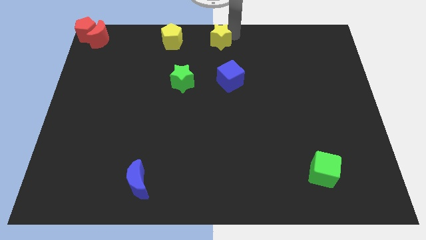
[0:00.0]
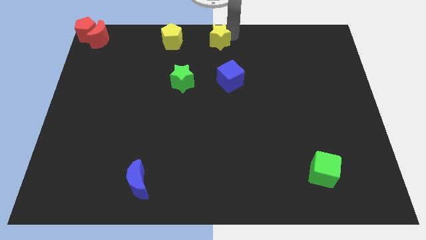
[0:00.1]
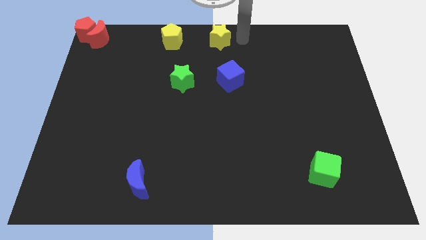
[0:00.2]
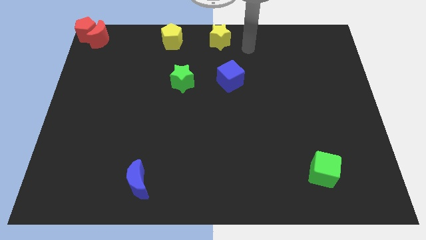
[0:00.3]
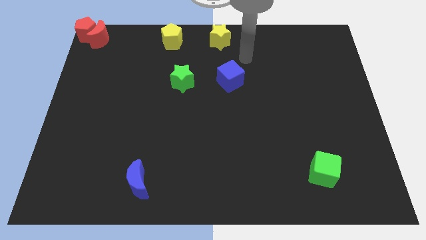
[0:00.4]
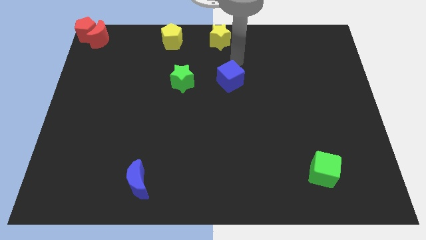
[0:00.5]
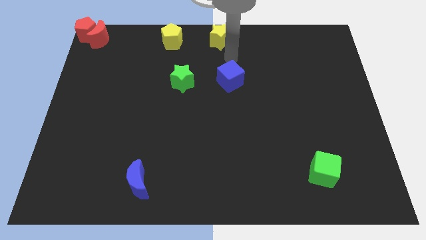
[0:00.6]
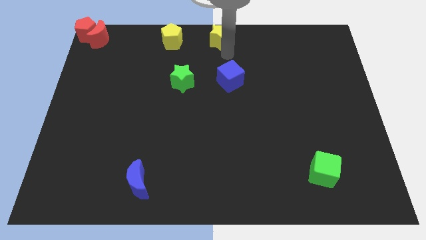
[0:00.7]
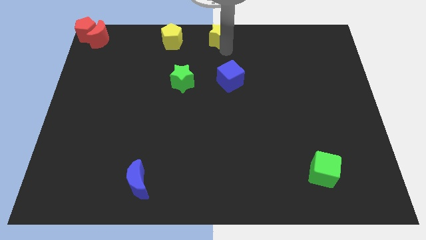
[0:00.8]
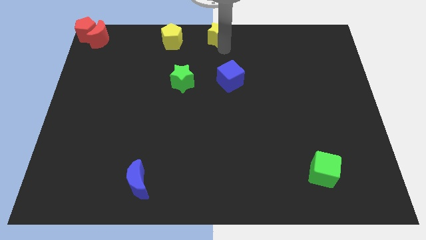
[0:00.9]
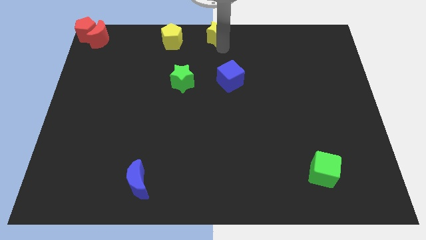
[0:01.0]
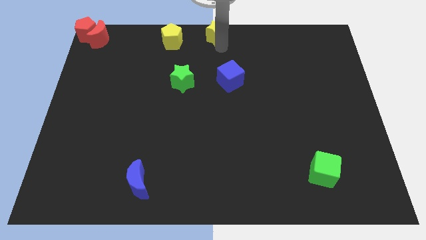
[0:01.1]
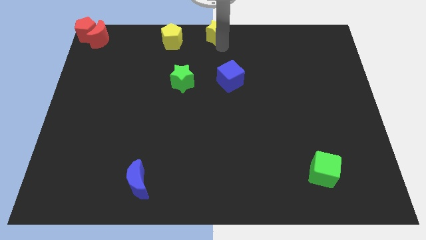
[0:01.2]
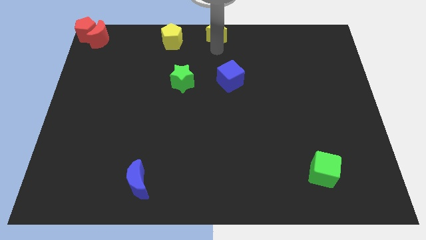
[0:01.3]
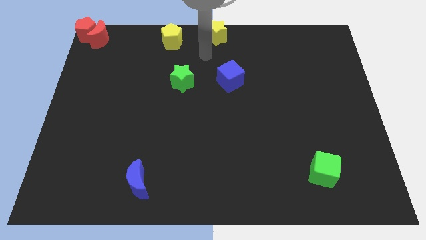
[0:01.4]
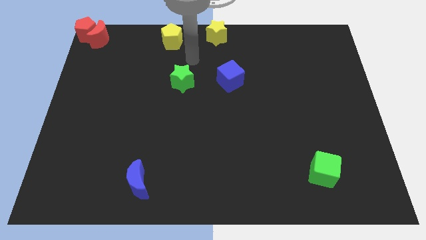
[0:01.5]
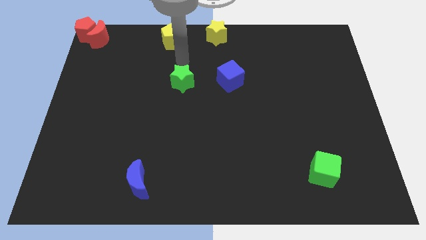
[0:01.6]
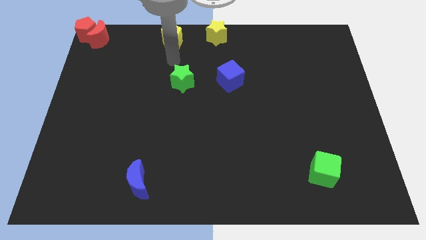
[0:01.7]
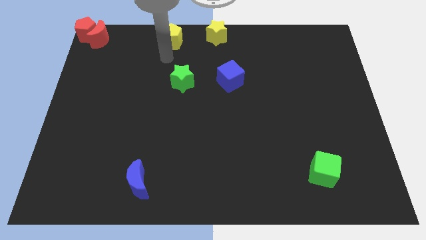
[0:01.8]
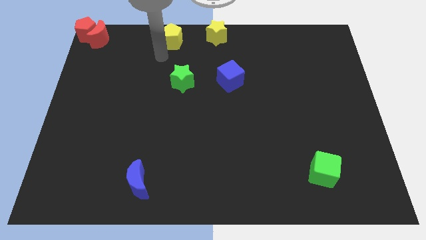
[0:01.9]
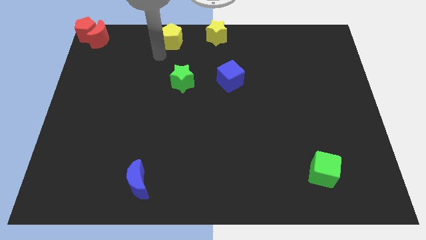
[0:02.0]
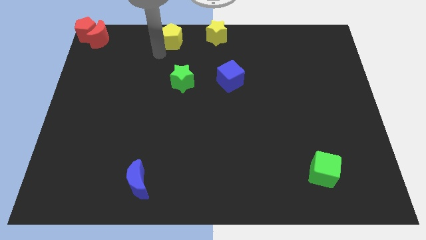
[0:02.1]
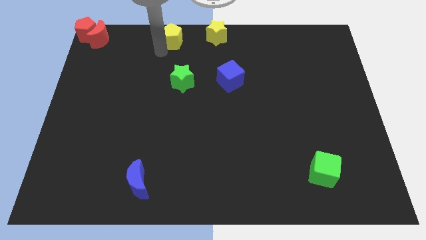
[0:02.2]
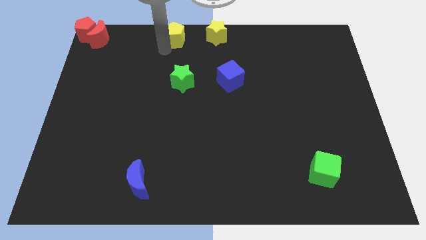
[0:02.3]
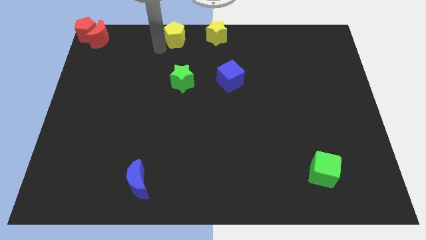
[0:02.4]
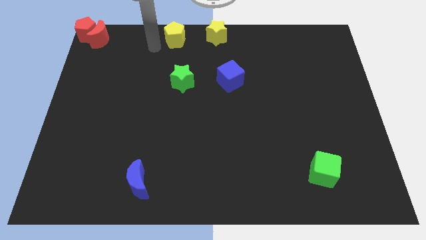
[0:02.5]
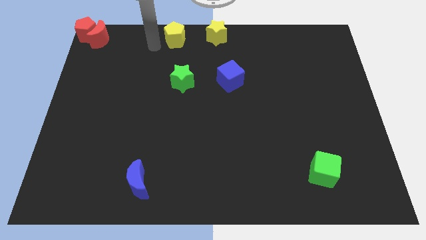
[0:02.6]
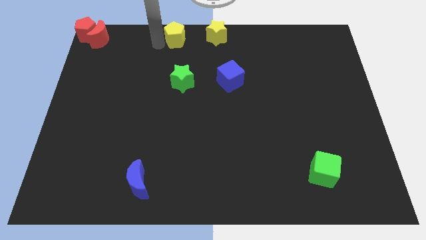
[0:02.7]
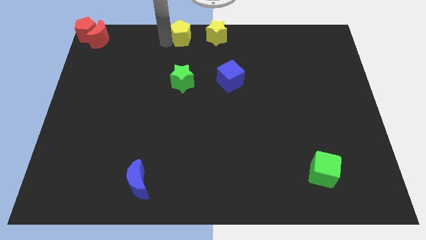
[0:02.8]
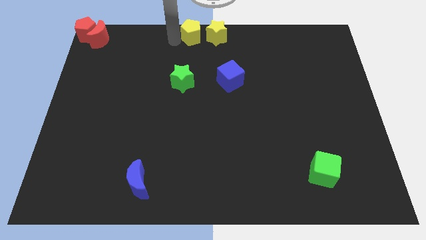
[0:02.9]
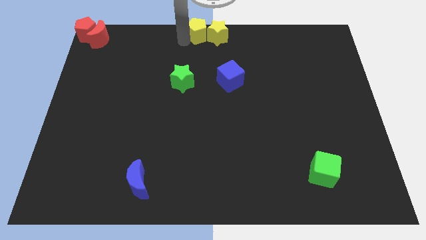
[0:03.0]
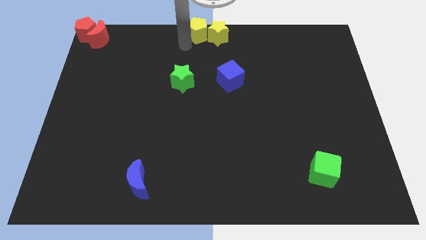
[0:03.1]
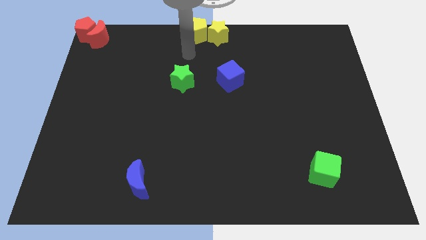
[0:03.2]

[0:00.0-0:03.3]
push the yellow blocks to the top center of the board

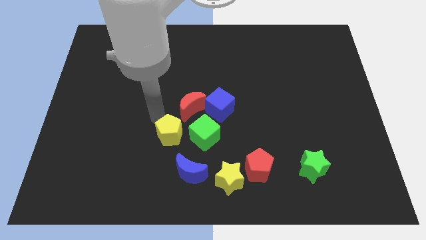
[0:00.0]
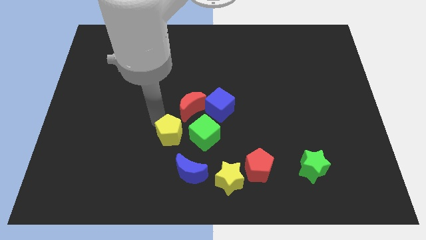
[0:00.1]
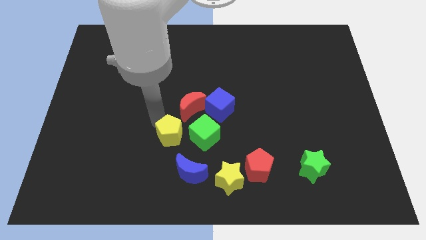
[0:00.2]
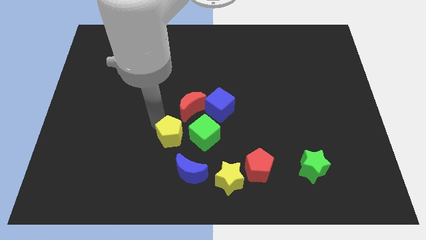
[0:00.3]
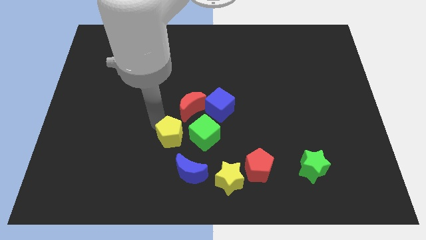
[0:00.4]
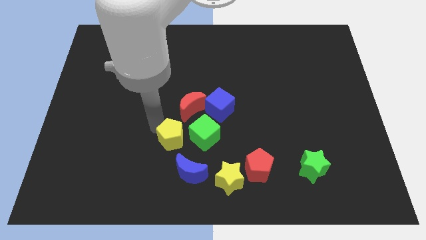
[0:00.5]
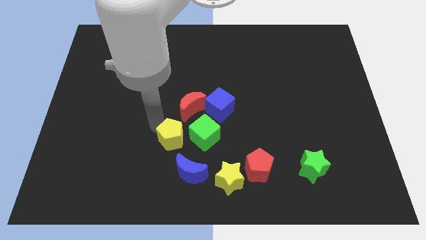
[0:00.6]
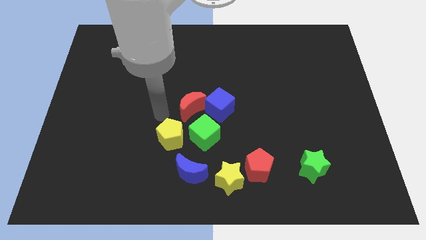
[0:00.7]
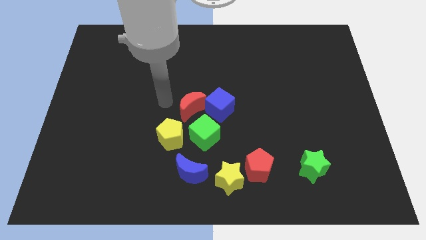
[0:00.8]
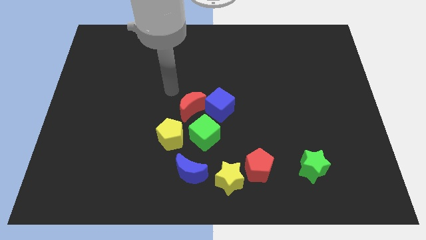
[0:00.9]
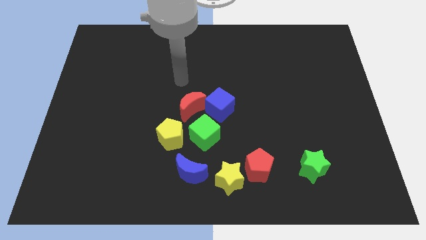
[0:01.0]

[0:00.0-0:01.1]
form a group by pushing the yellow pentgon

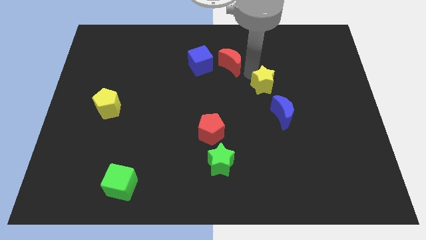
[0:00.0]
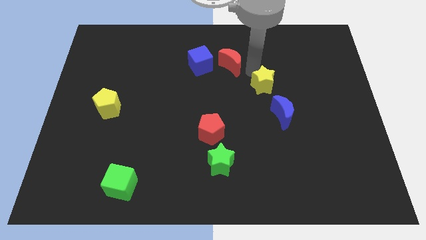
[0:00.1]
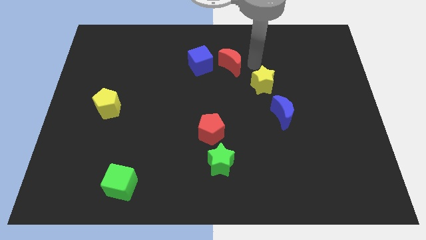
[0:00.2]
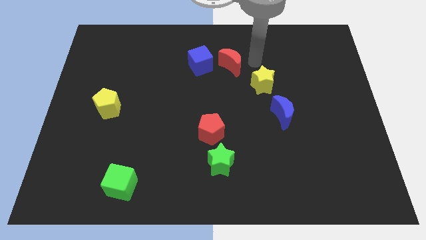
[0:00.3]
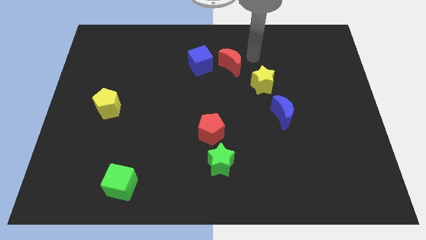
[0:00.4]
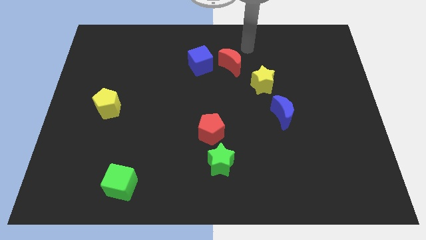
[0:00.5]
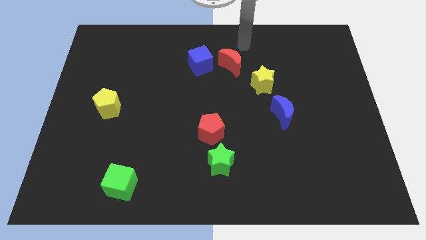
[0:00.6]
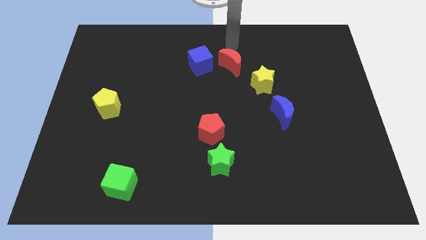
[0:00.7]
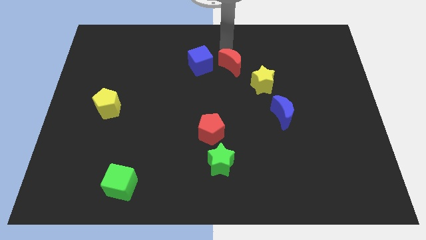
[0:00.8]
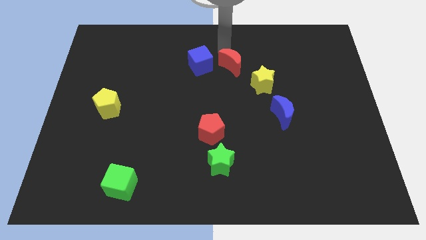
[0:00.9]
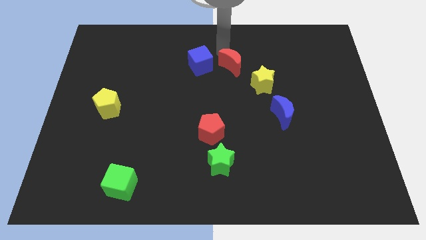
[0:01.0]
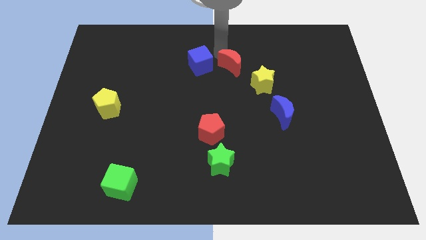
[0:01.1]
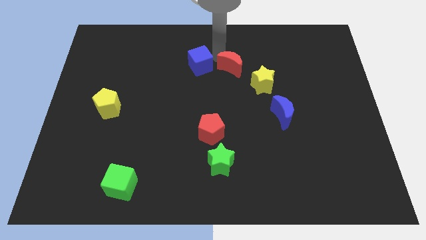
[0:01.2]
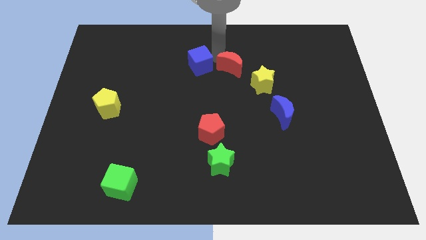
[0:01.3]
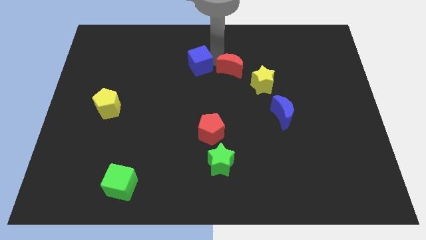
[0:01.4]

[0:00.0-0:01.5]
slightly touch the red crsecent

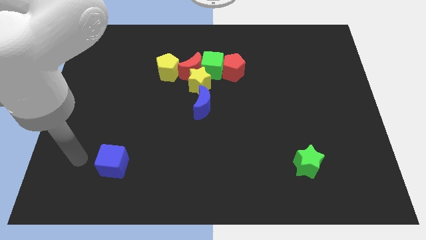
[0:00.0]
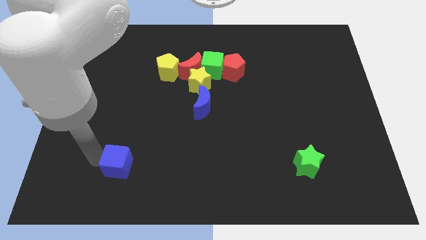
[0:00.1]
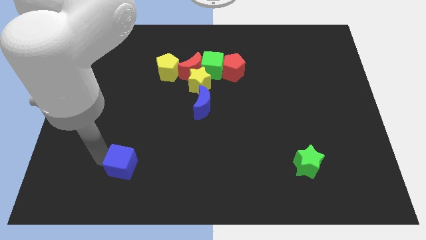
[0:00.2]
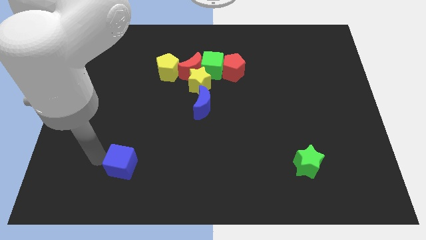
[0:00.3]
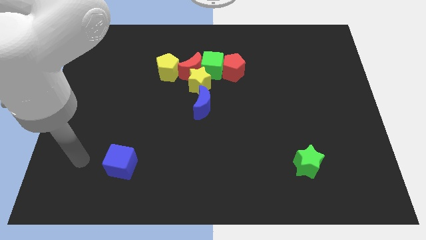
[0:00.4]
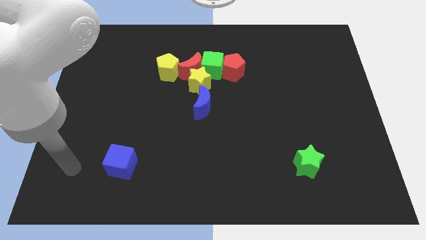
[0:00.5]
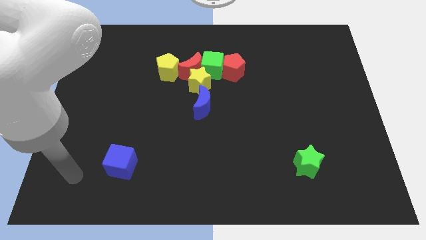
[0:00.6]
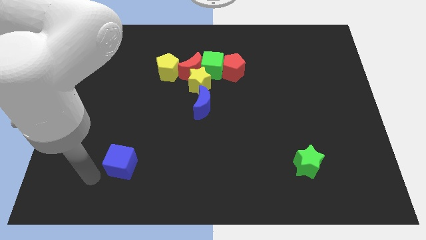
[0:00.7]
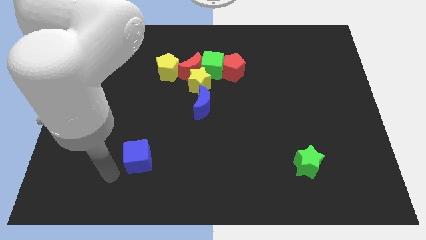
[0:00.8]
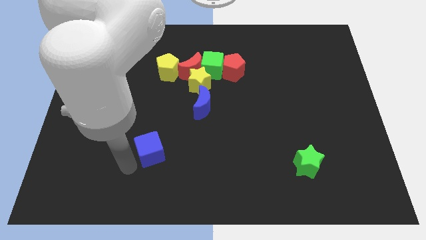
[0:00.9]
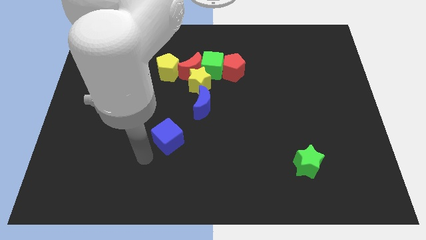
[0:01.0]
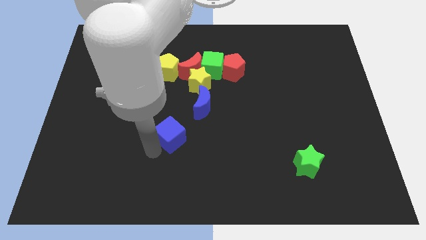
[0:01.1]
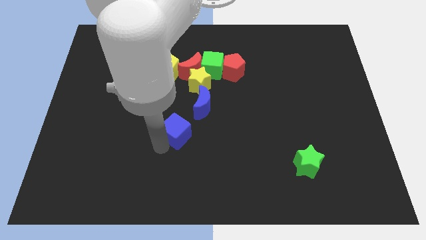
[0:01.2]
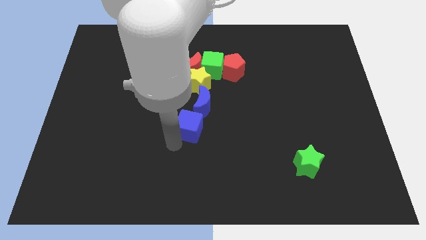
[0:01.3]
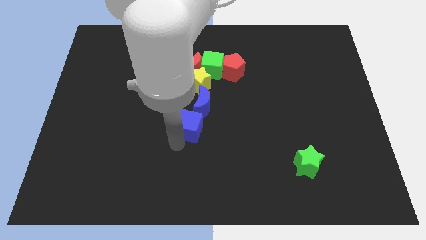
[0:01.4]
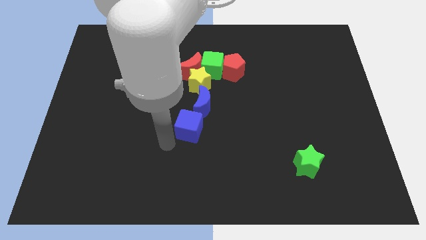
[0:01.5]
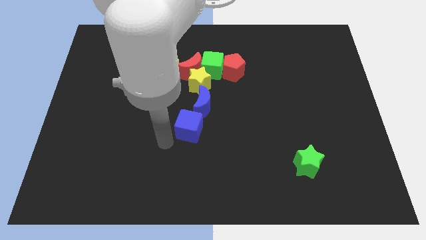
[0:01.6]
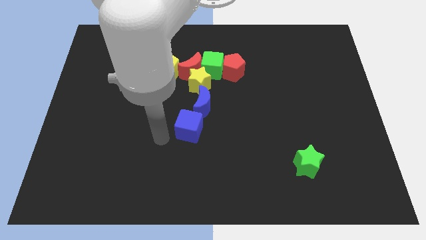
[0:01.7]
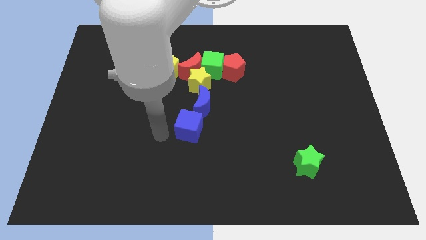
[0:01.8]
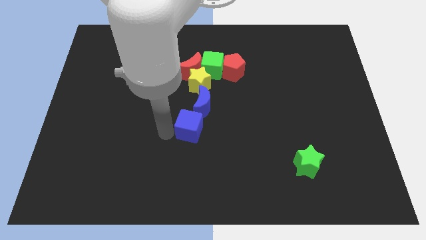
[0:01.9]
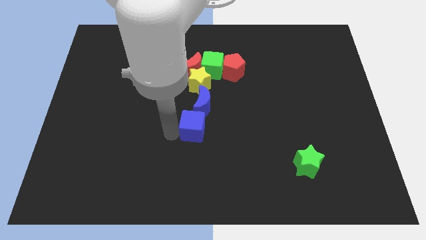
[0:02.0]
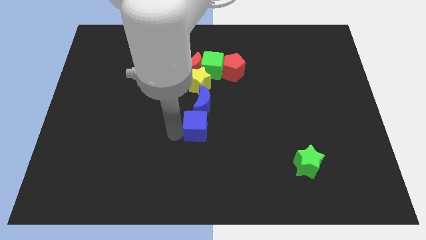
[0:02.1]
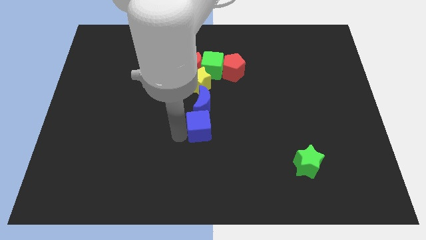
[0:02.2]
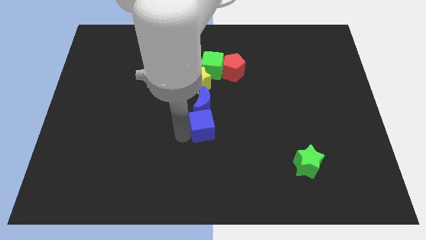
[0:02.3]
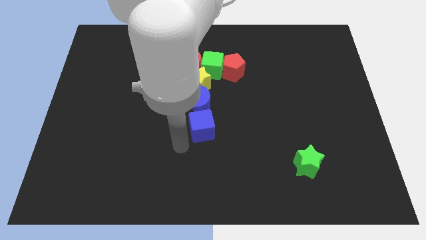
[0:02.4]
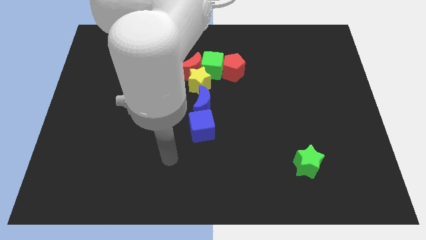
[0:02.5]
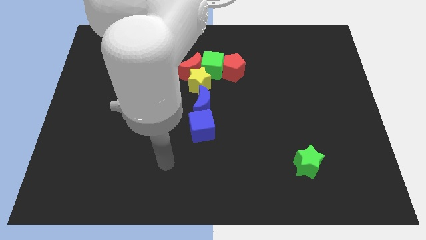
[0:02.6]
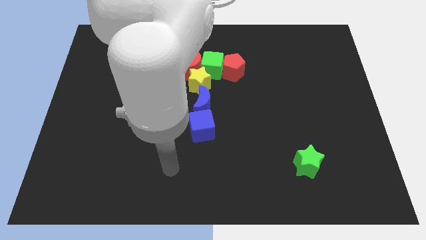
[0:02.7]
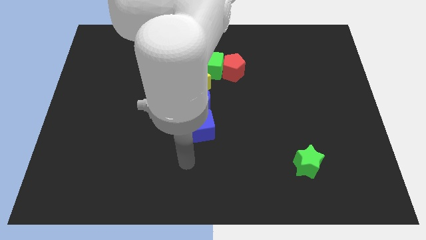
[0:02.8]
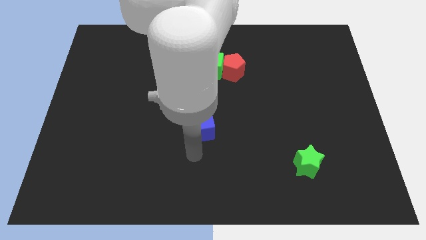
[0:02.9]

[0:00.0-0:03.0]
slide the blue cube towards the bottom side of the blue crescent

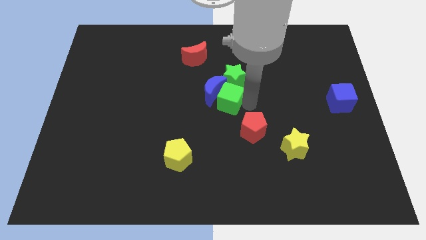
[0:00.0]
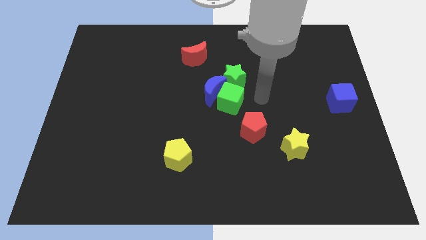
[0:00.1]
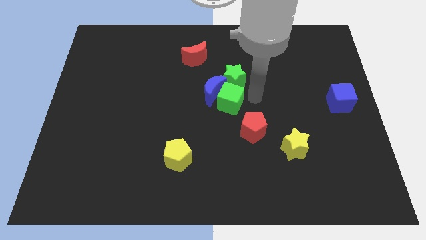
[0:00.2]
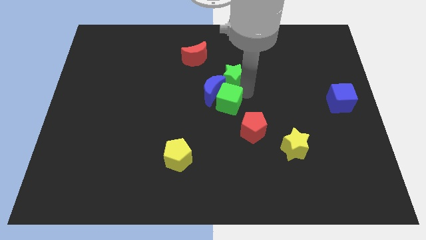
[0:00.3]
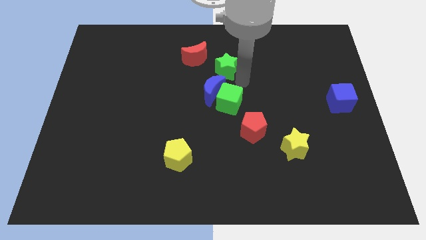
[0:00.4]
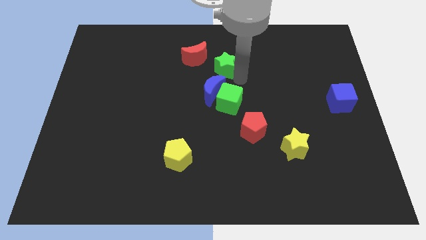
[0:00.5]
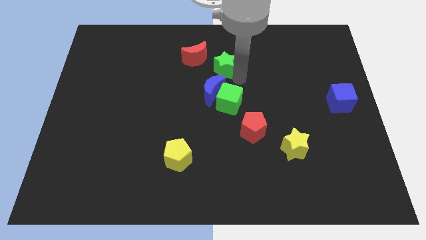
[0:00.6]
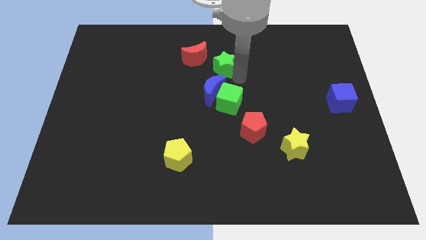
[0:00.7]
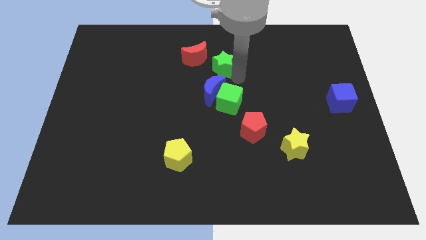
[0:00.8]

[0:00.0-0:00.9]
separate the green star from the blue crescent and green cube
